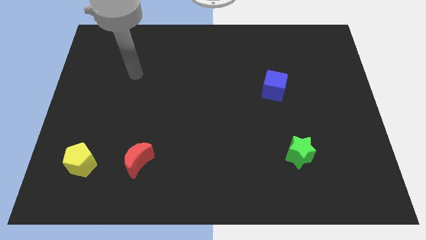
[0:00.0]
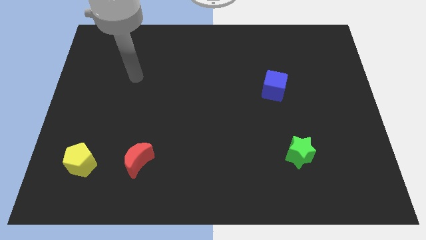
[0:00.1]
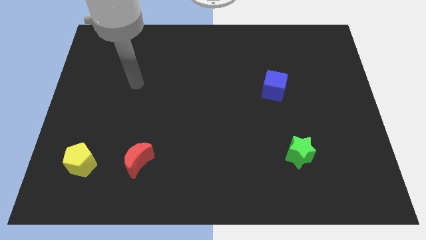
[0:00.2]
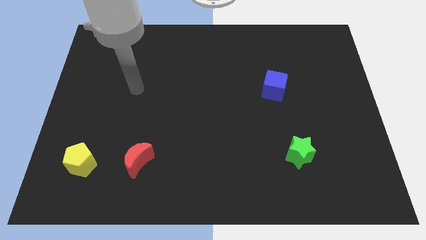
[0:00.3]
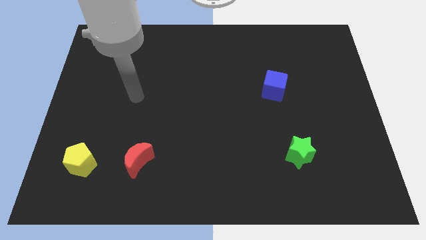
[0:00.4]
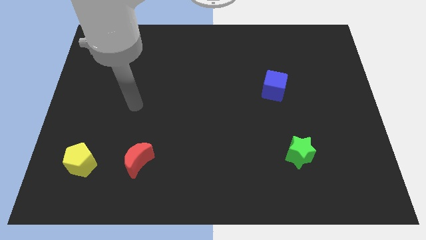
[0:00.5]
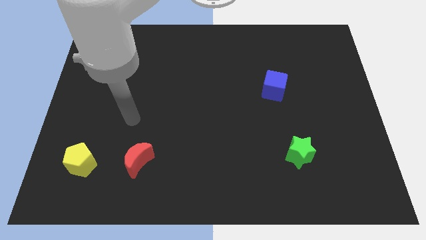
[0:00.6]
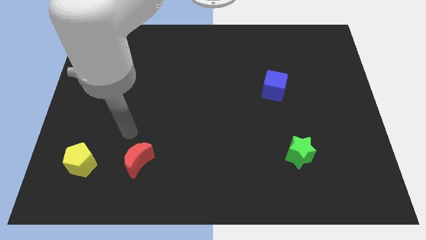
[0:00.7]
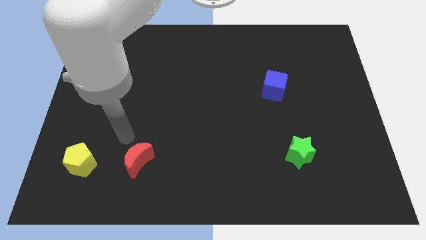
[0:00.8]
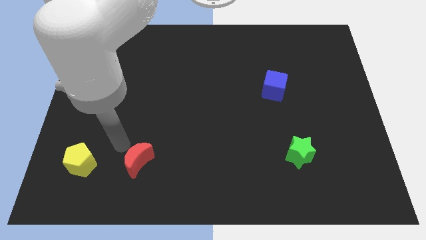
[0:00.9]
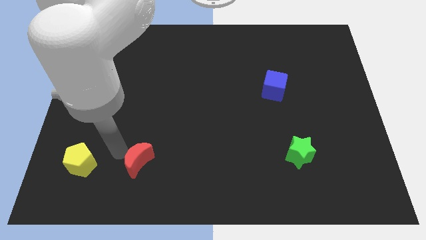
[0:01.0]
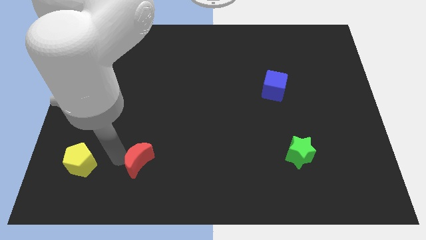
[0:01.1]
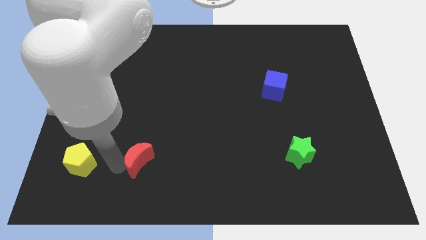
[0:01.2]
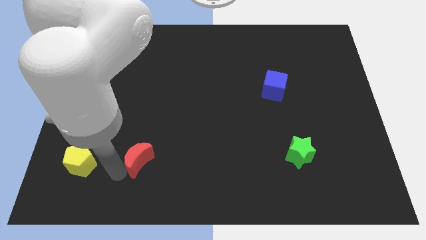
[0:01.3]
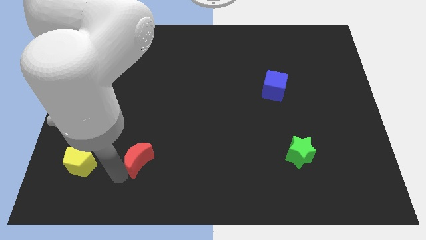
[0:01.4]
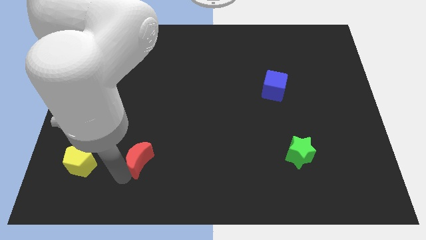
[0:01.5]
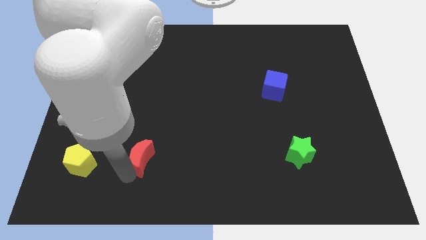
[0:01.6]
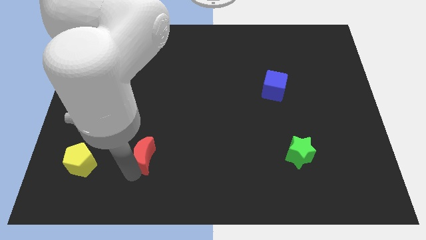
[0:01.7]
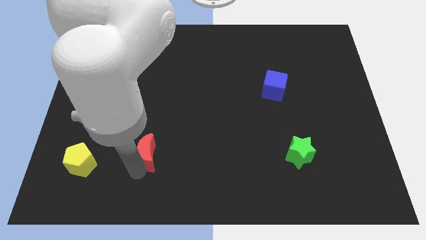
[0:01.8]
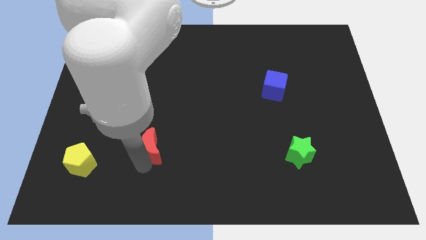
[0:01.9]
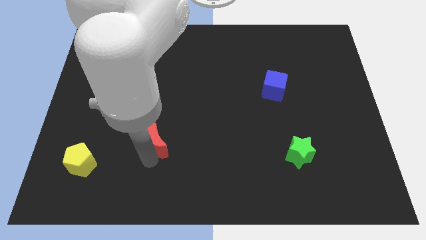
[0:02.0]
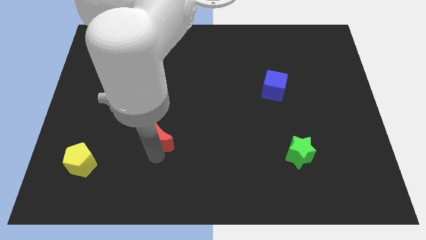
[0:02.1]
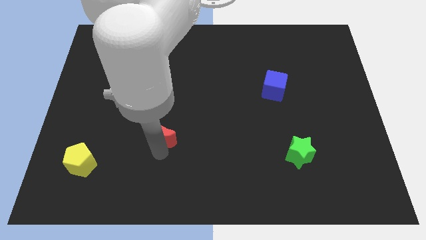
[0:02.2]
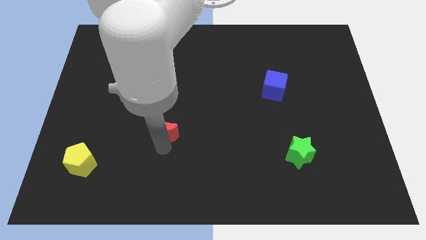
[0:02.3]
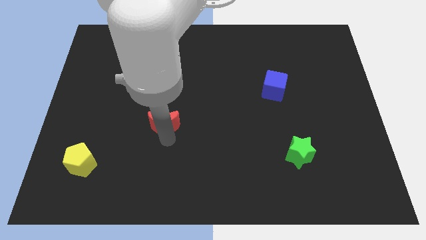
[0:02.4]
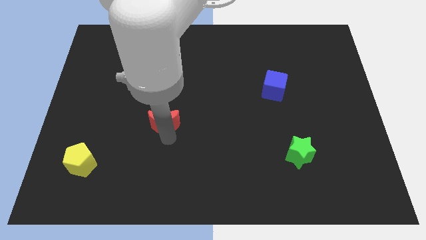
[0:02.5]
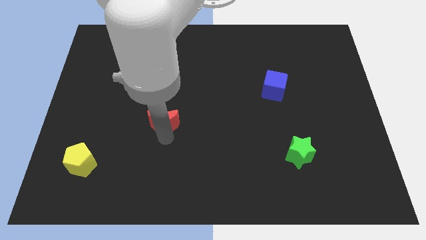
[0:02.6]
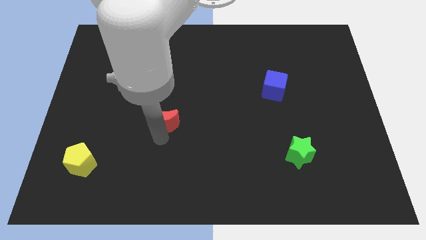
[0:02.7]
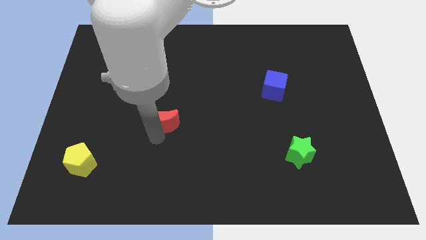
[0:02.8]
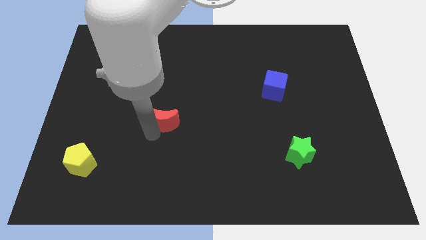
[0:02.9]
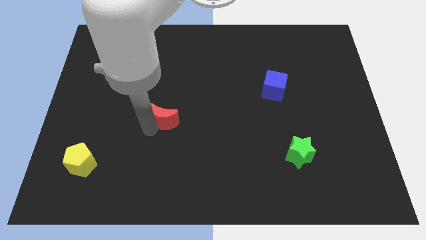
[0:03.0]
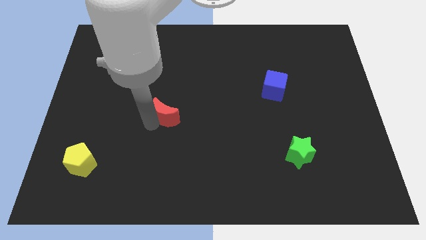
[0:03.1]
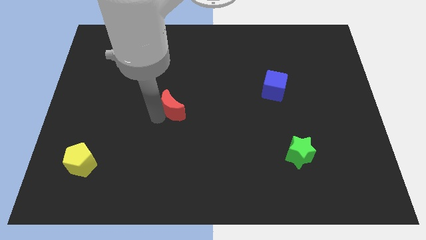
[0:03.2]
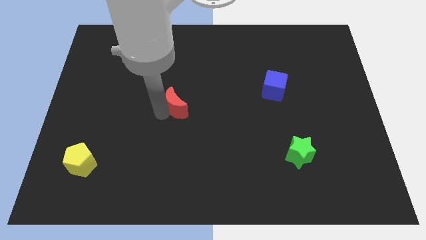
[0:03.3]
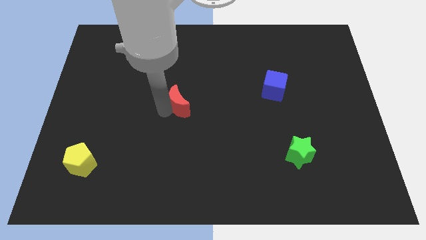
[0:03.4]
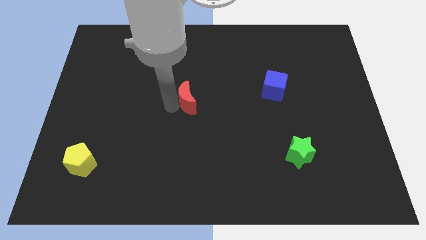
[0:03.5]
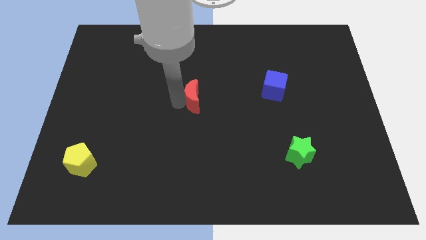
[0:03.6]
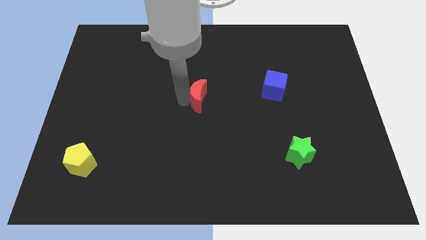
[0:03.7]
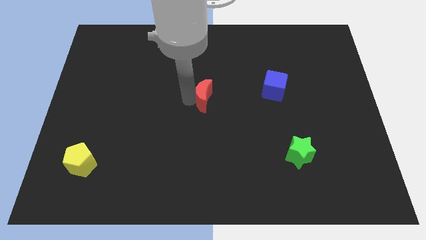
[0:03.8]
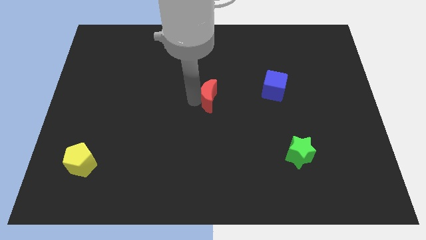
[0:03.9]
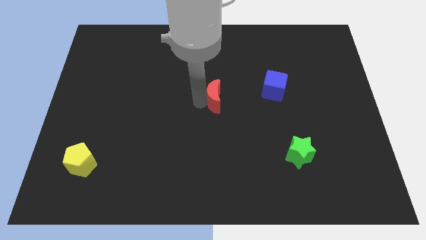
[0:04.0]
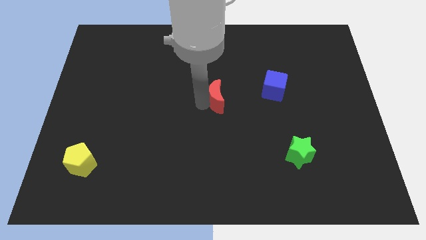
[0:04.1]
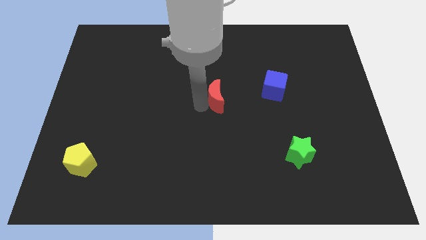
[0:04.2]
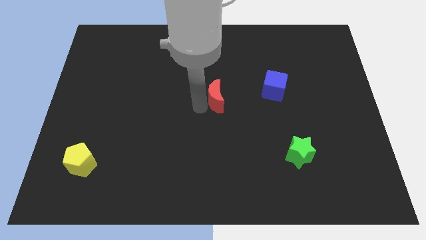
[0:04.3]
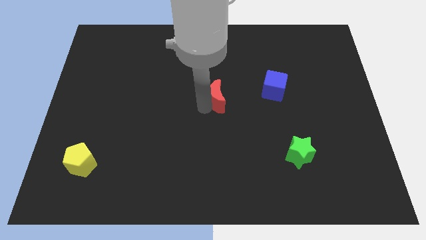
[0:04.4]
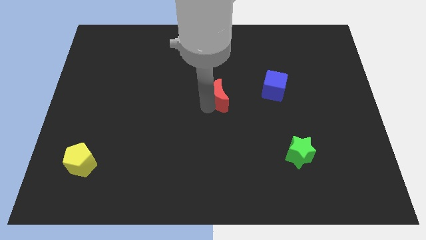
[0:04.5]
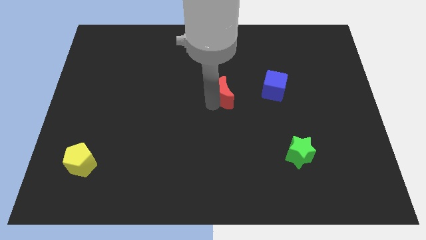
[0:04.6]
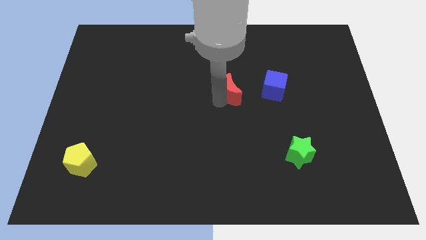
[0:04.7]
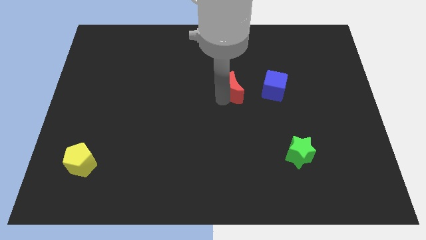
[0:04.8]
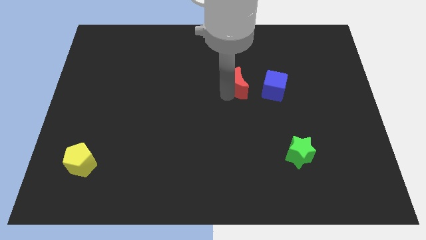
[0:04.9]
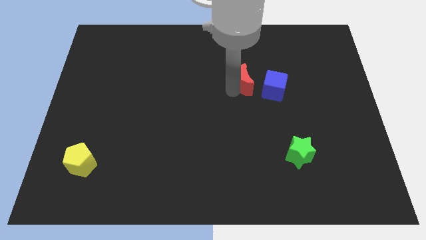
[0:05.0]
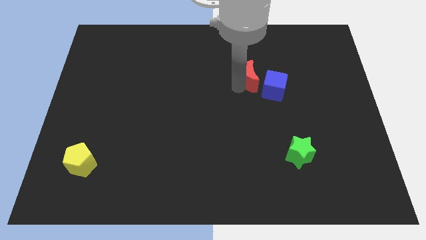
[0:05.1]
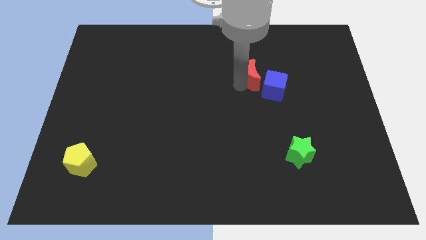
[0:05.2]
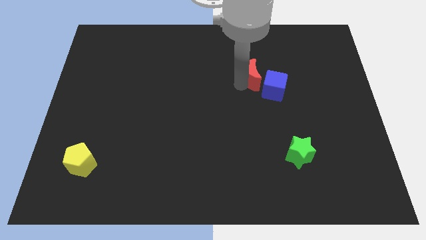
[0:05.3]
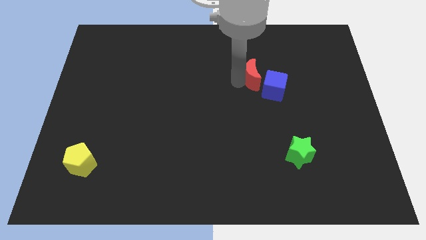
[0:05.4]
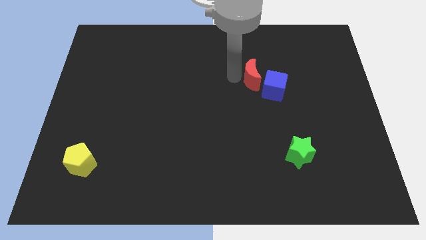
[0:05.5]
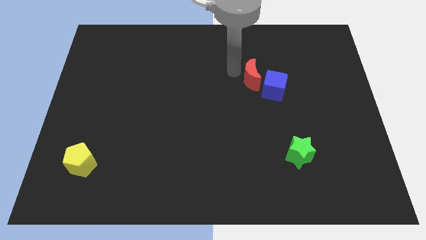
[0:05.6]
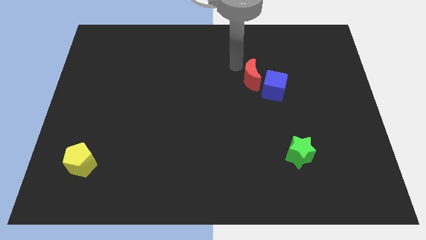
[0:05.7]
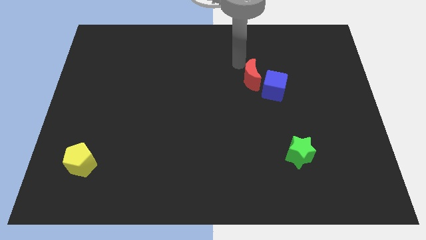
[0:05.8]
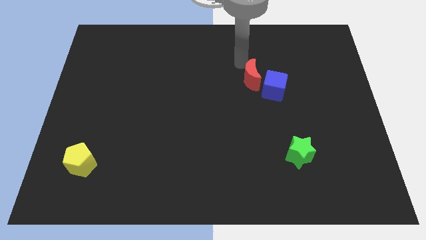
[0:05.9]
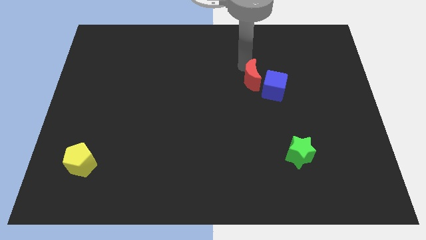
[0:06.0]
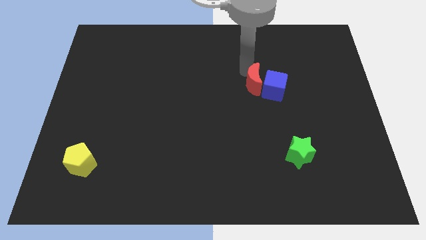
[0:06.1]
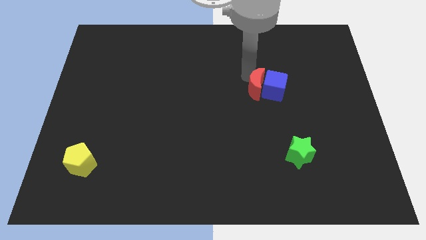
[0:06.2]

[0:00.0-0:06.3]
push the red block towards the blue cube

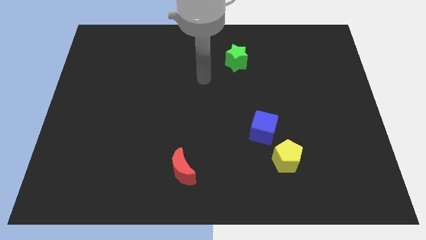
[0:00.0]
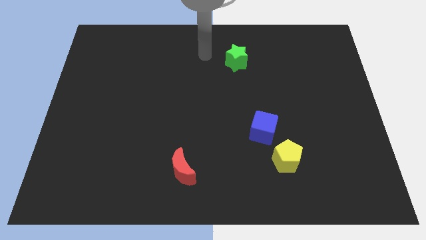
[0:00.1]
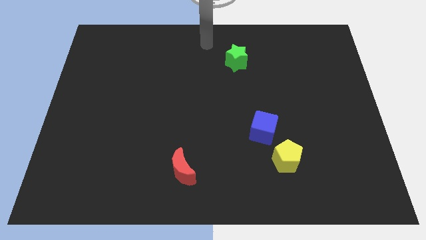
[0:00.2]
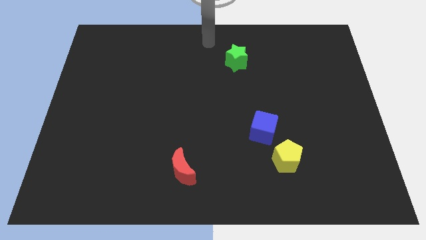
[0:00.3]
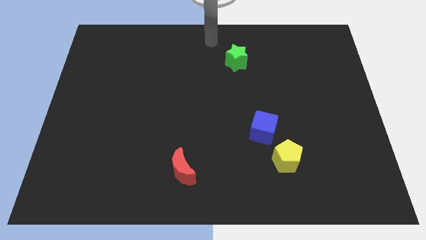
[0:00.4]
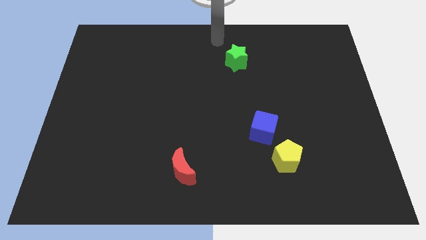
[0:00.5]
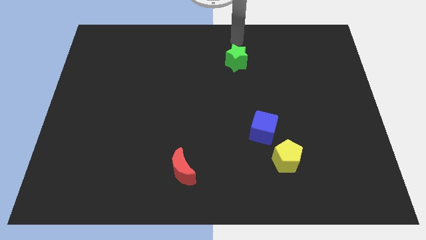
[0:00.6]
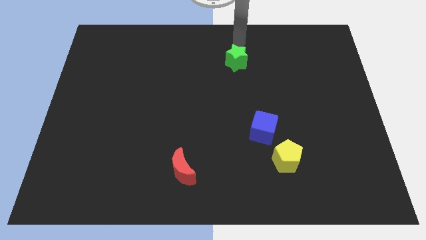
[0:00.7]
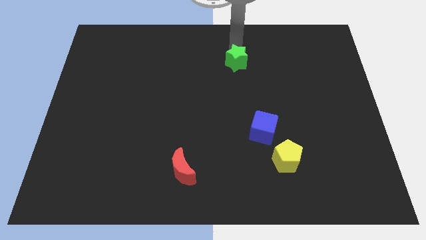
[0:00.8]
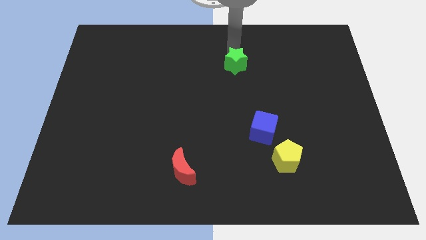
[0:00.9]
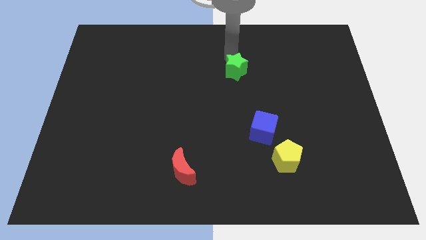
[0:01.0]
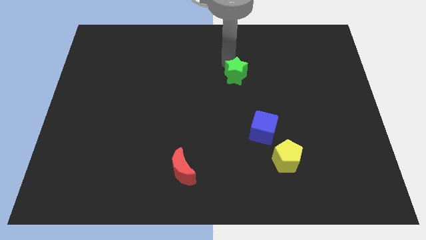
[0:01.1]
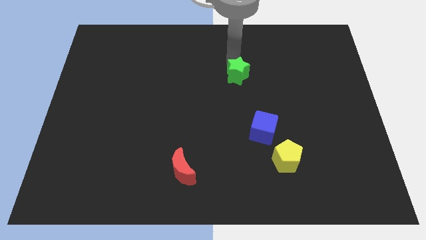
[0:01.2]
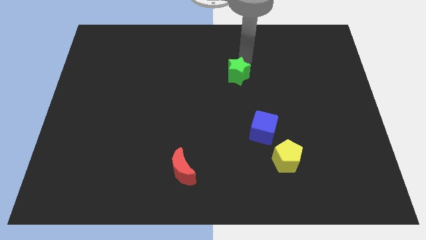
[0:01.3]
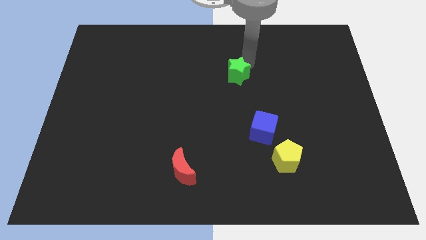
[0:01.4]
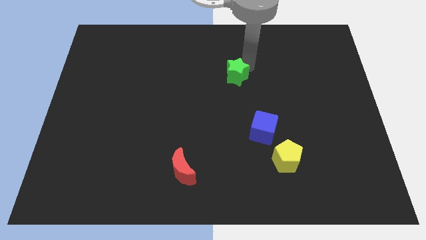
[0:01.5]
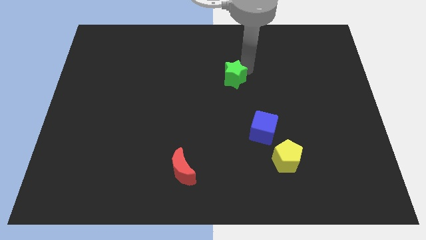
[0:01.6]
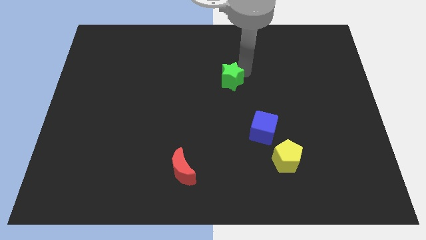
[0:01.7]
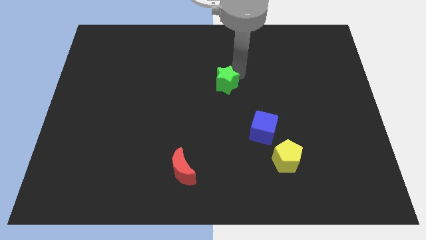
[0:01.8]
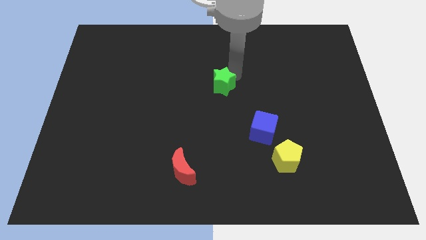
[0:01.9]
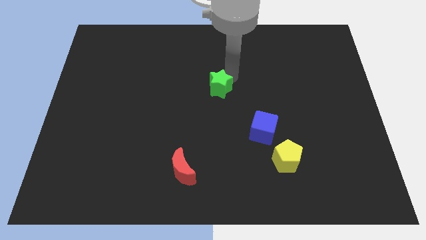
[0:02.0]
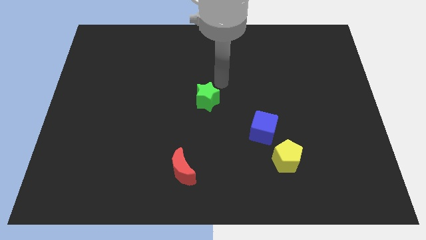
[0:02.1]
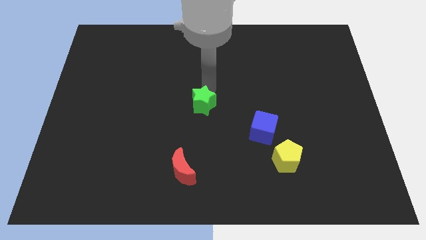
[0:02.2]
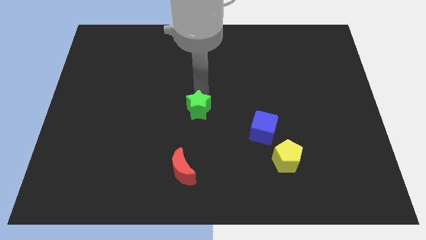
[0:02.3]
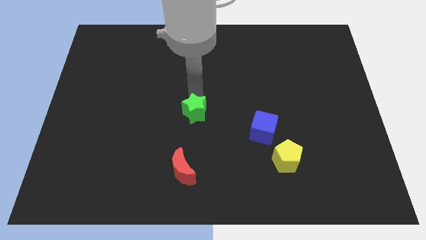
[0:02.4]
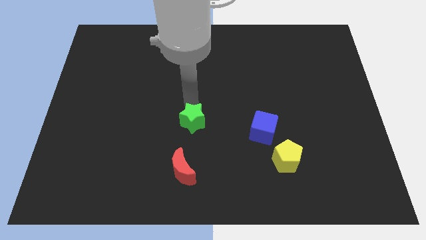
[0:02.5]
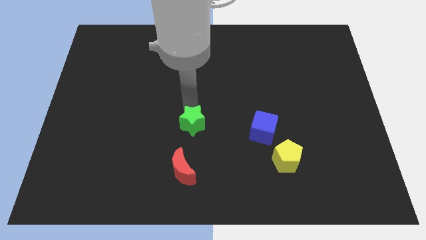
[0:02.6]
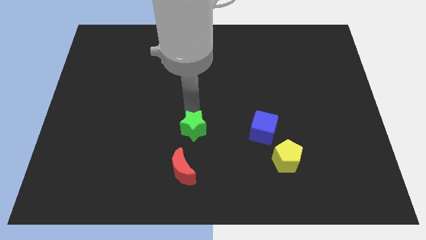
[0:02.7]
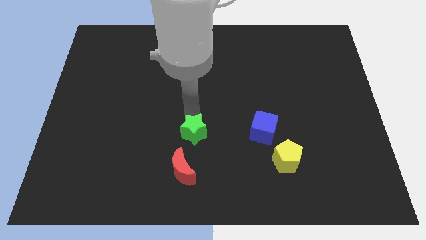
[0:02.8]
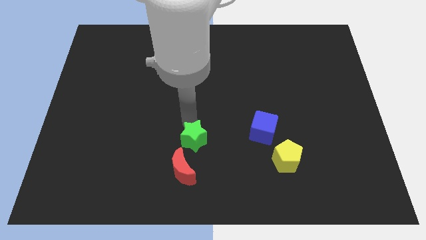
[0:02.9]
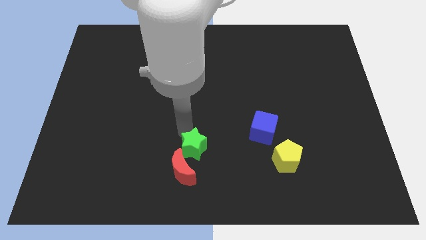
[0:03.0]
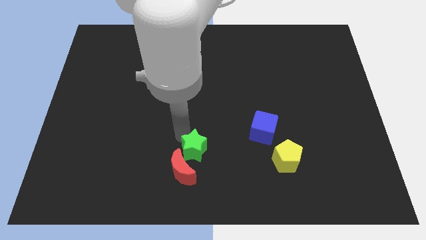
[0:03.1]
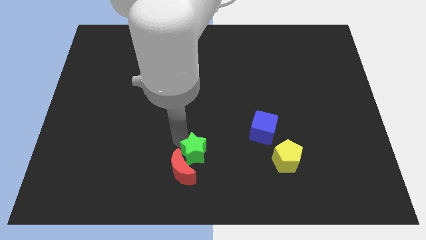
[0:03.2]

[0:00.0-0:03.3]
put the star towards the red moon
